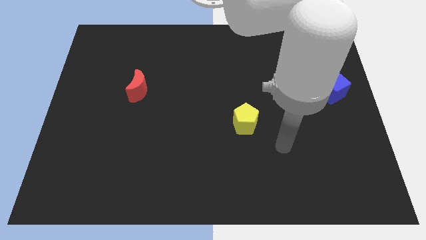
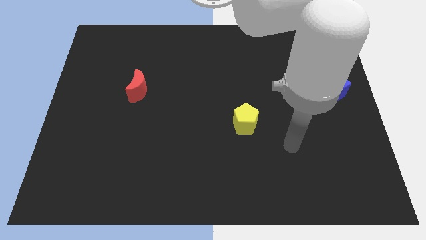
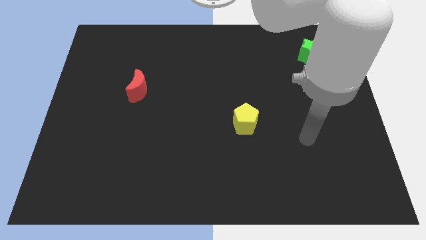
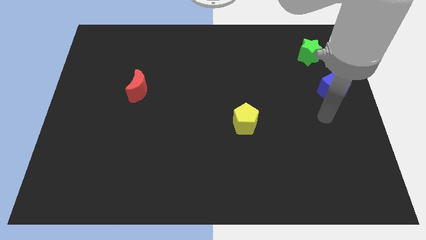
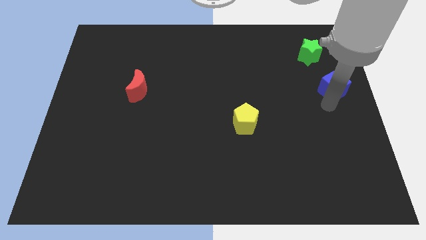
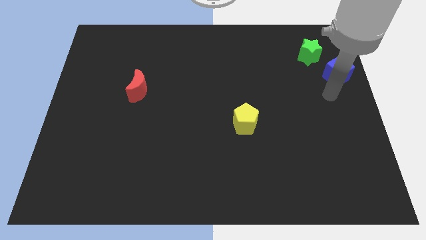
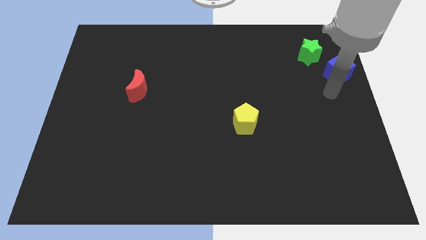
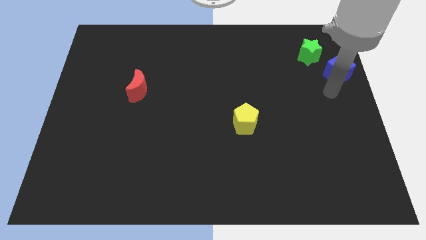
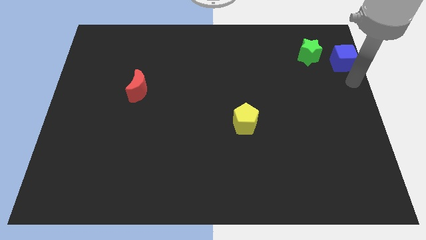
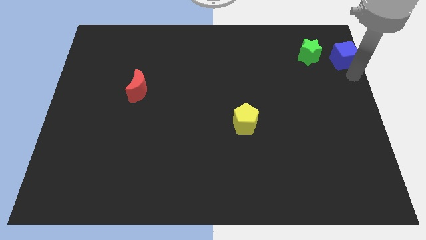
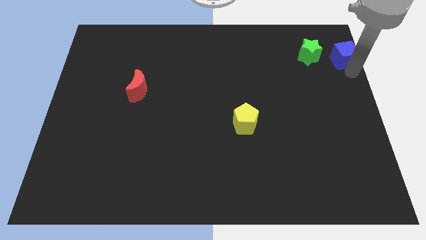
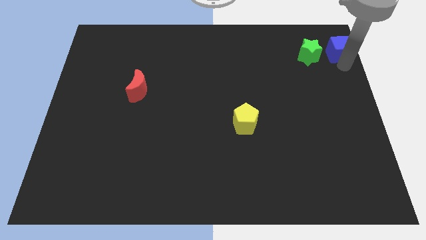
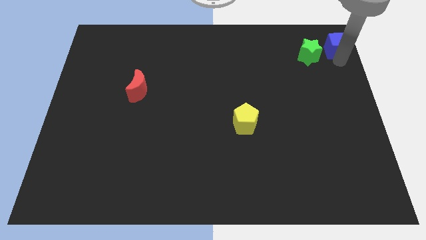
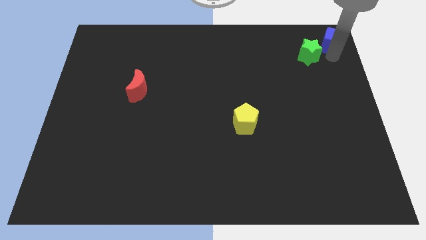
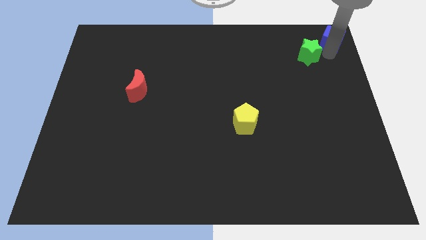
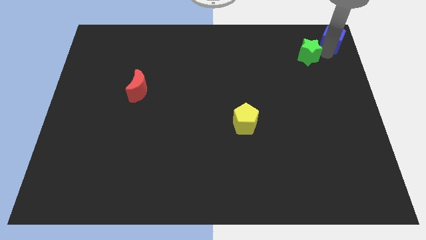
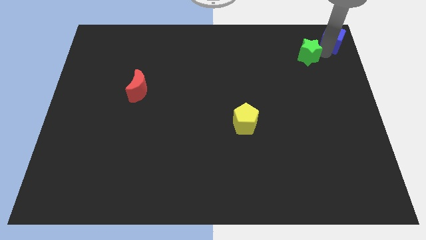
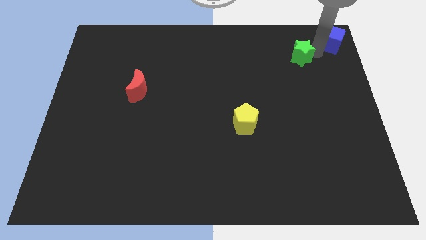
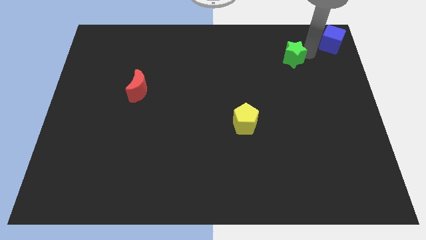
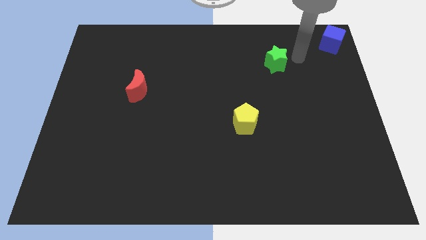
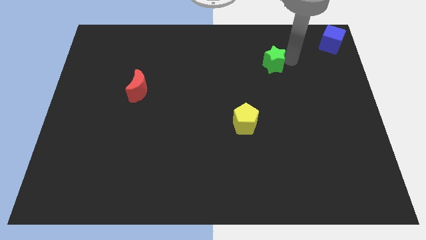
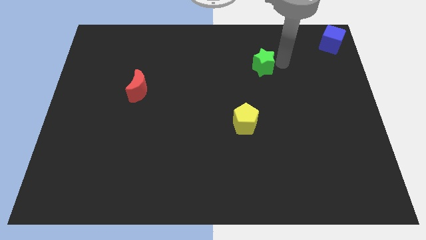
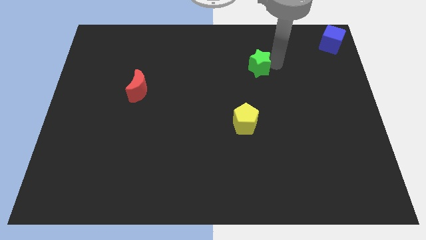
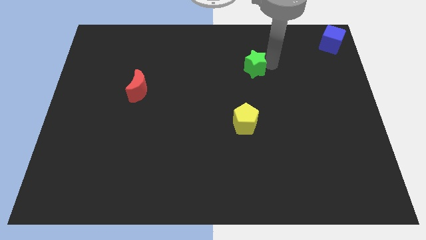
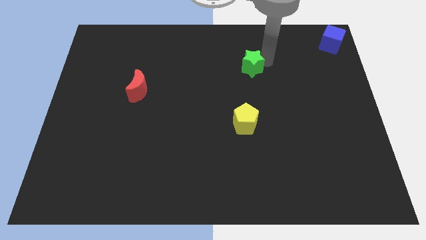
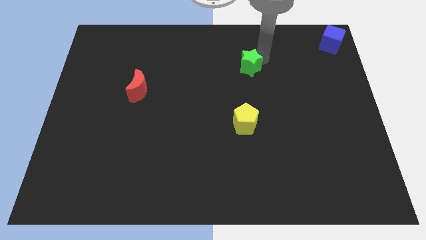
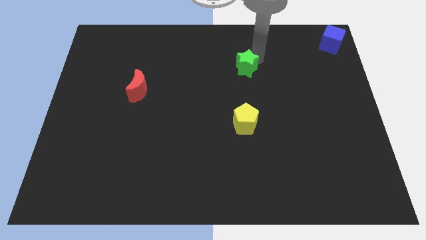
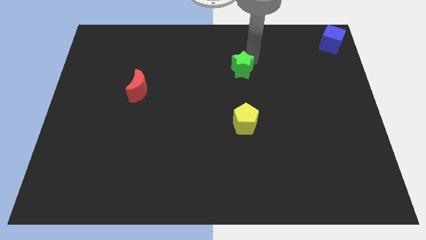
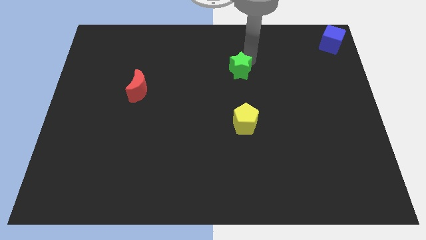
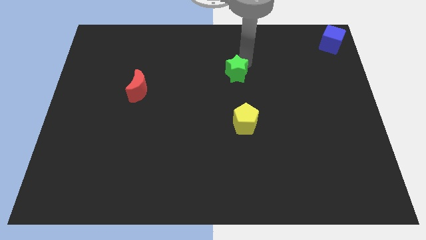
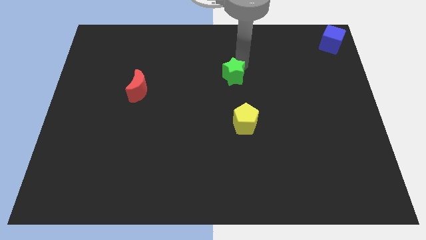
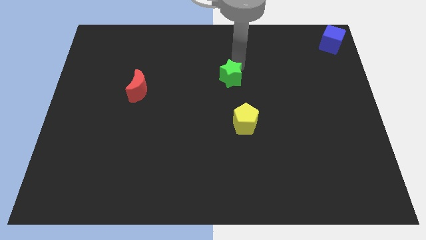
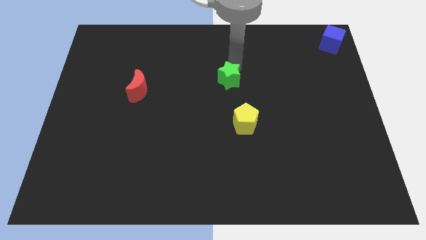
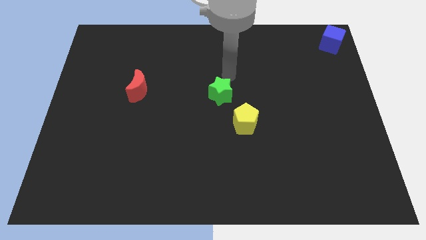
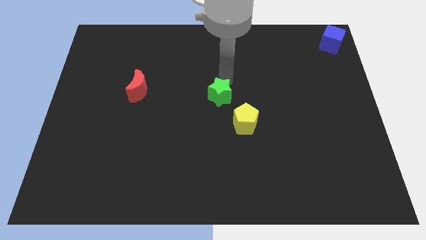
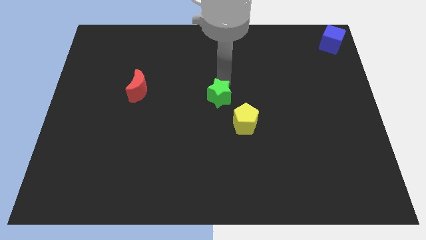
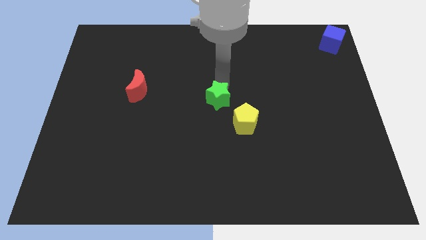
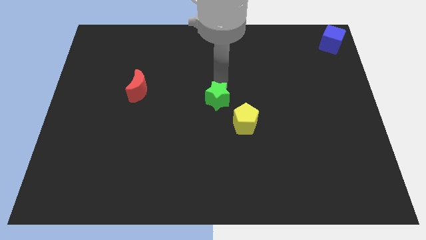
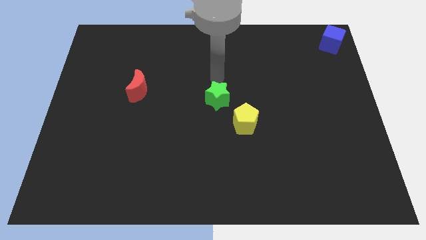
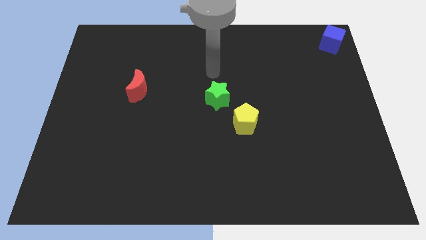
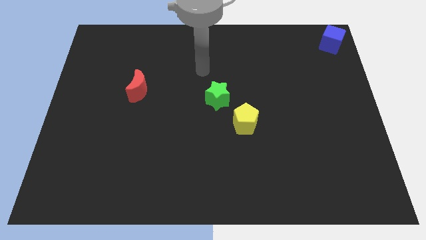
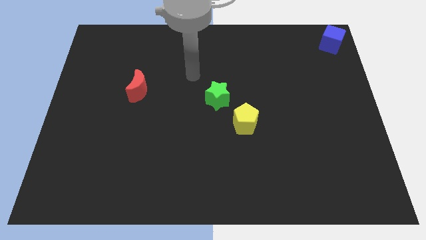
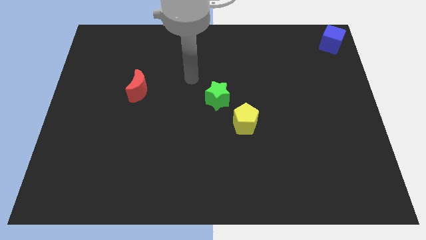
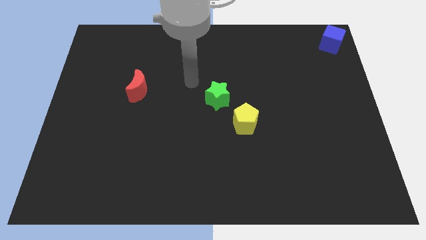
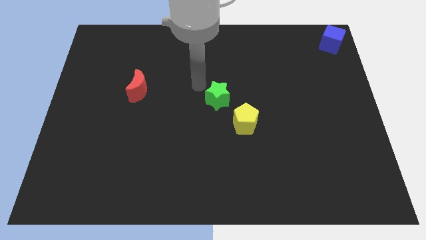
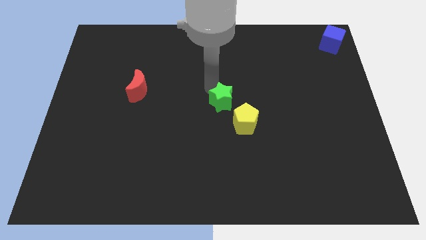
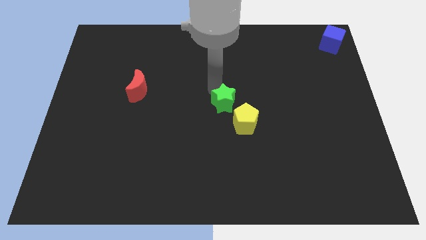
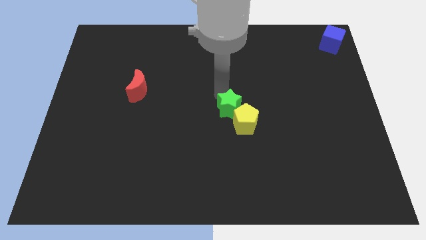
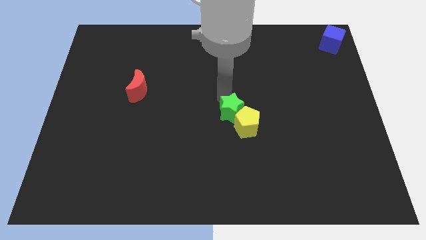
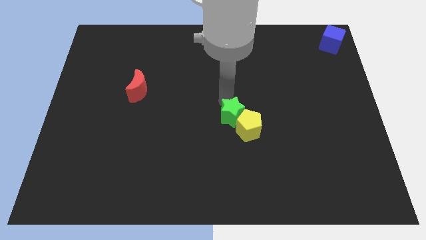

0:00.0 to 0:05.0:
push the green star to the yellow block

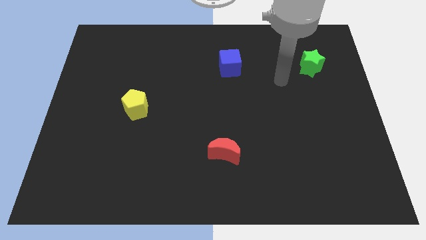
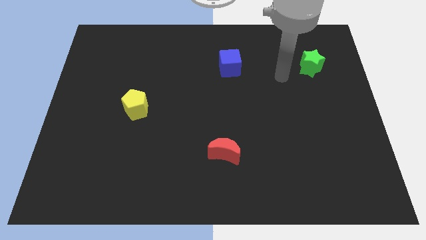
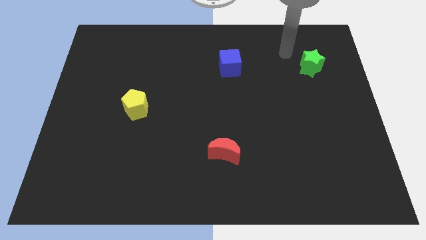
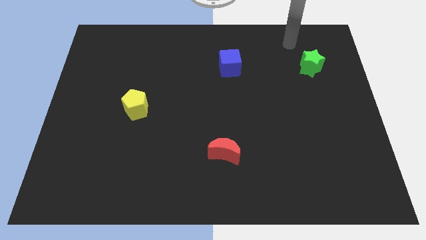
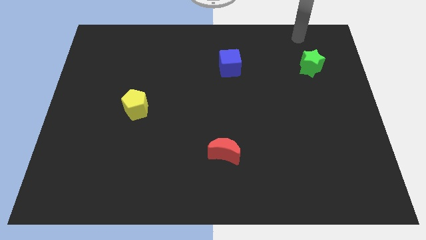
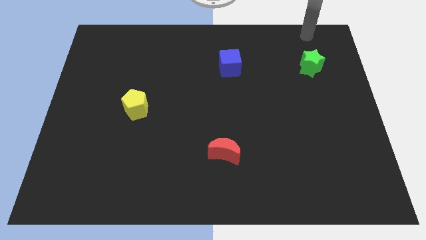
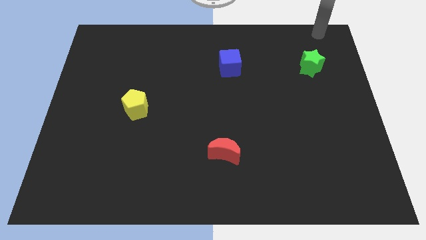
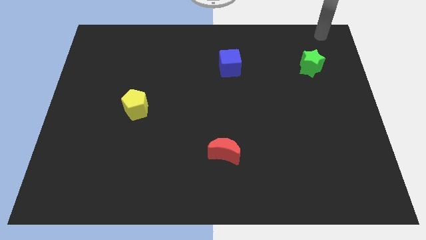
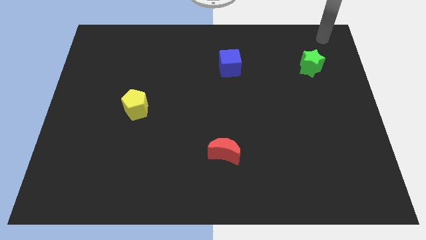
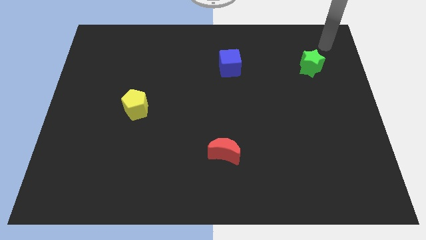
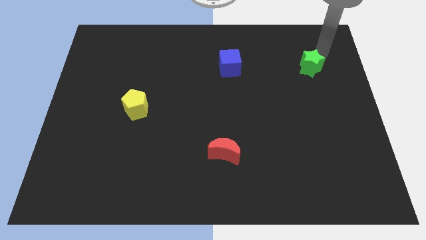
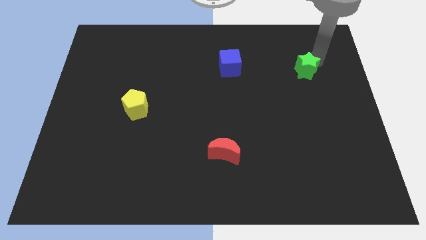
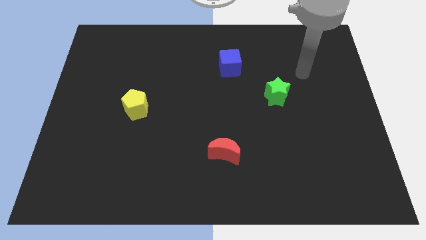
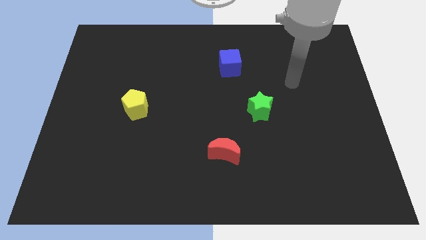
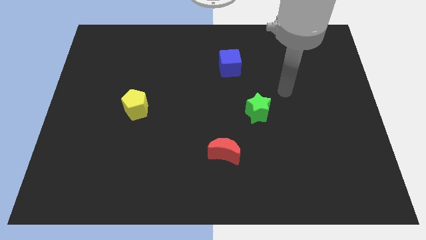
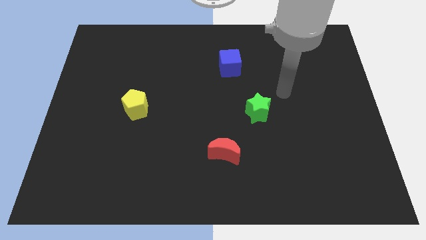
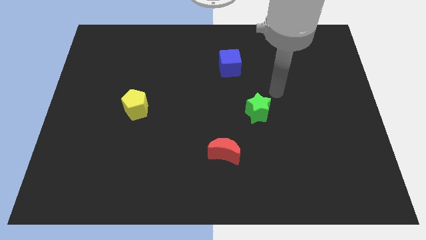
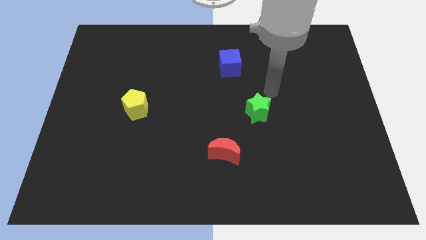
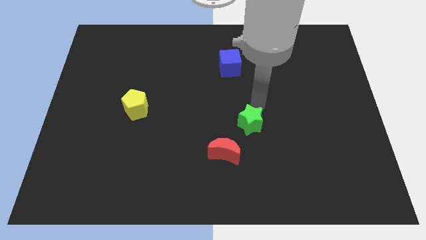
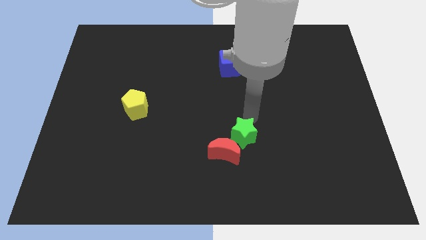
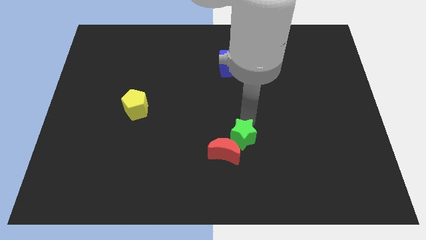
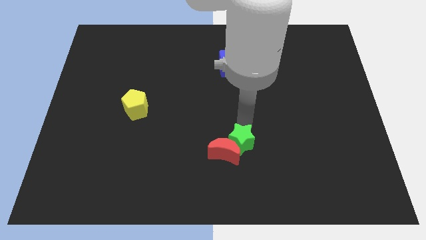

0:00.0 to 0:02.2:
move the star close to the red block

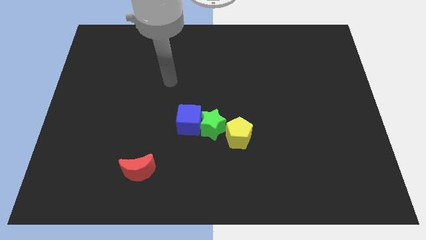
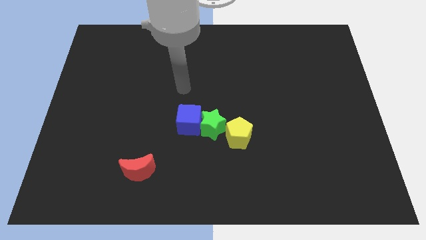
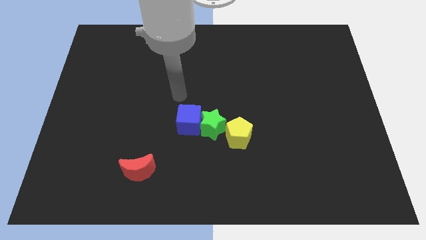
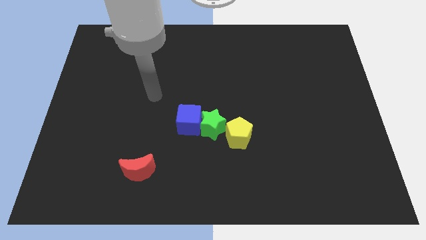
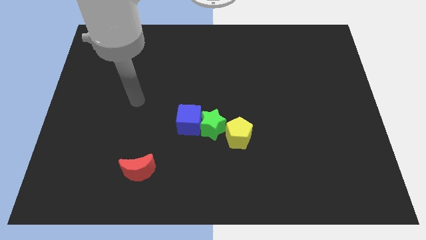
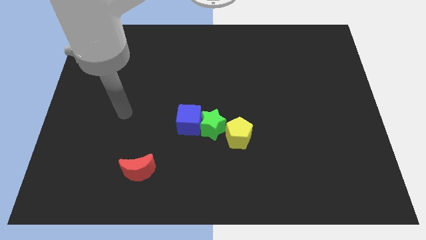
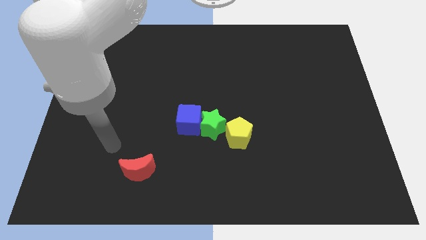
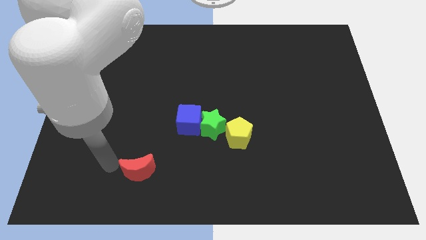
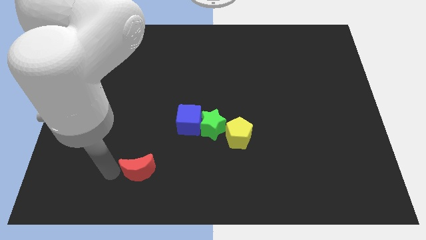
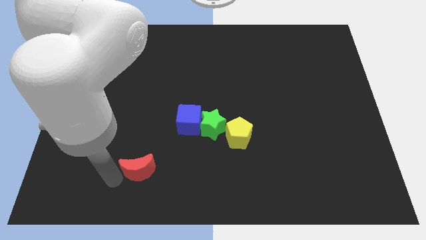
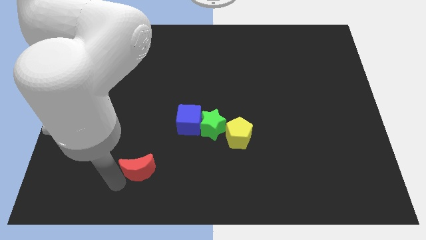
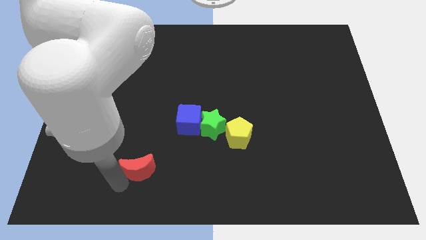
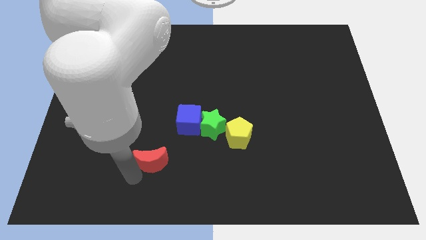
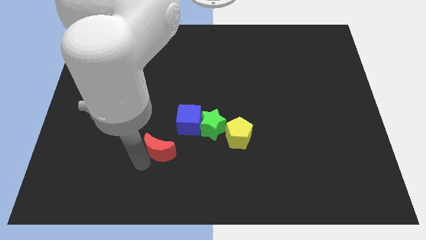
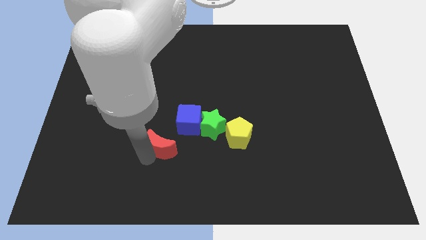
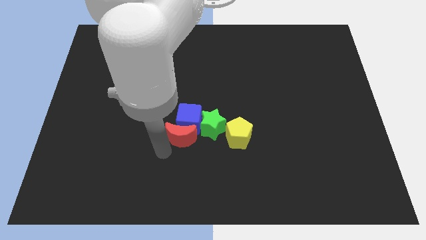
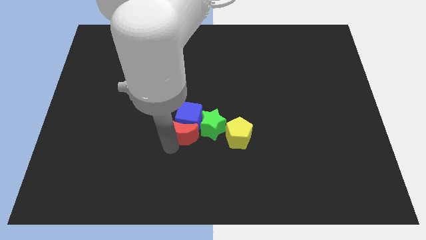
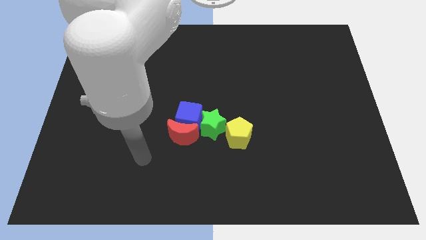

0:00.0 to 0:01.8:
push the moon to the blue cube
